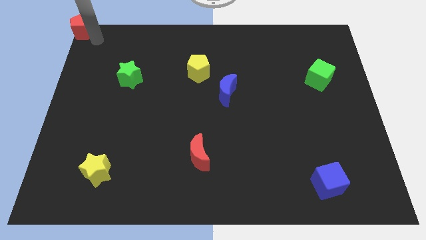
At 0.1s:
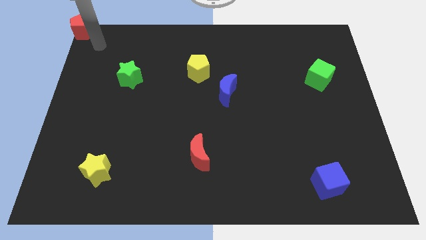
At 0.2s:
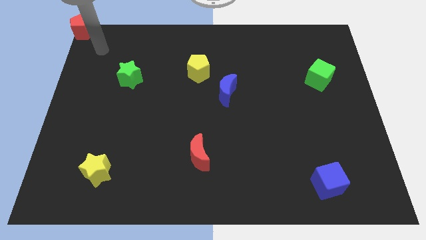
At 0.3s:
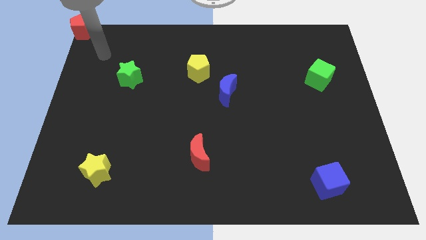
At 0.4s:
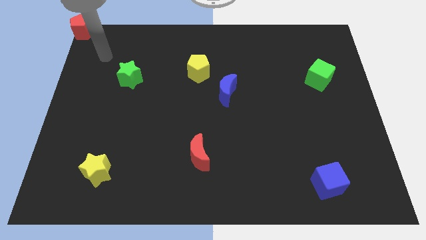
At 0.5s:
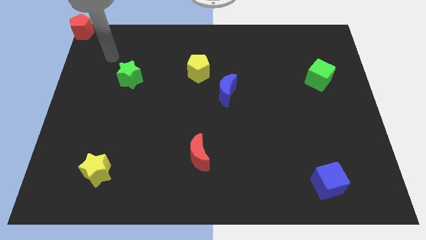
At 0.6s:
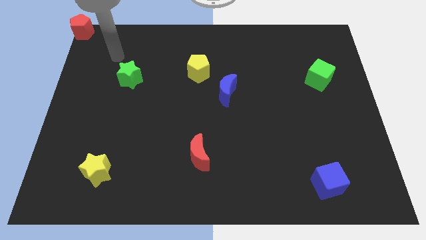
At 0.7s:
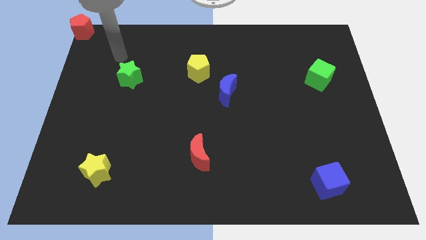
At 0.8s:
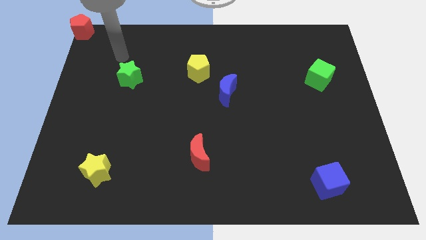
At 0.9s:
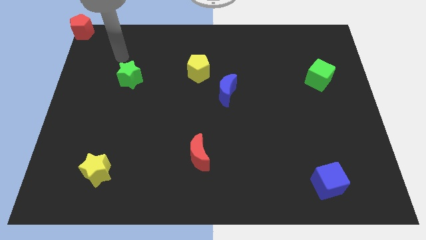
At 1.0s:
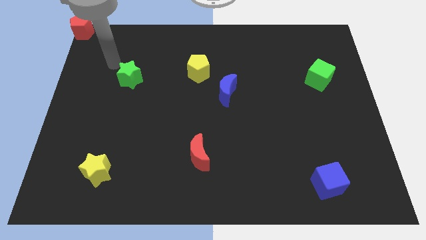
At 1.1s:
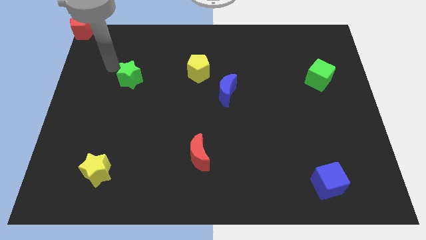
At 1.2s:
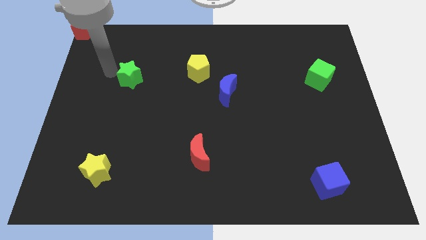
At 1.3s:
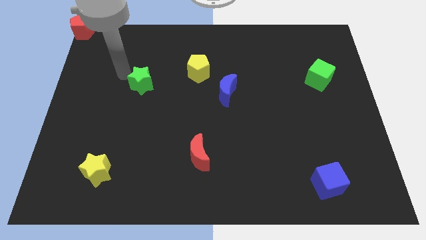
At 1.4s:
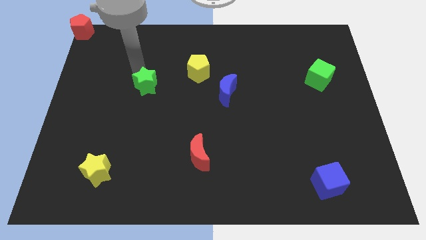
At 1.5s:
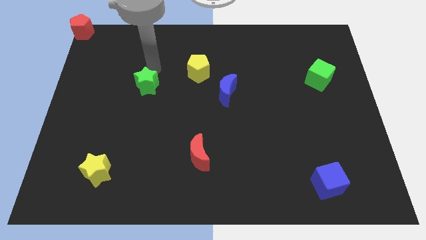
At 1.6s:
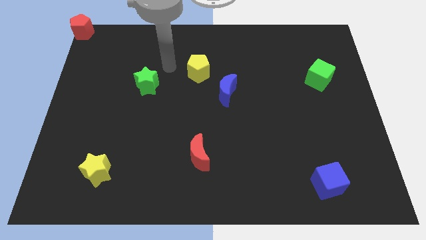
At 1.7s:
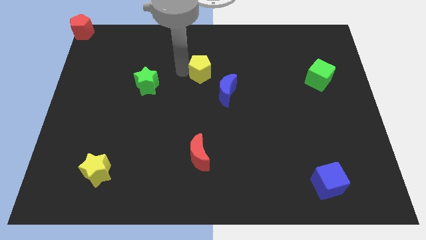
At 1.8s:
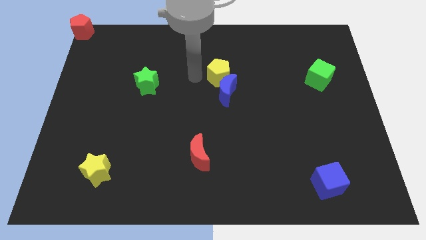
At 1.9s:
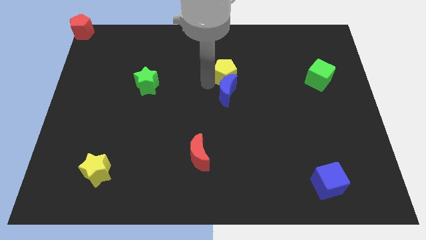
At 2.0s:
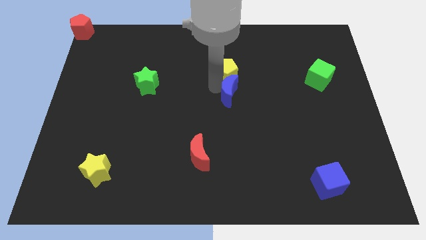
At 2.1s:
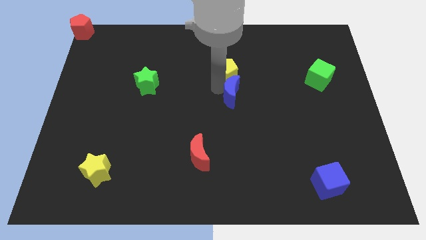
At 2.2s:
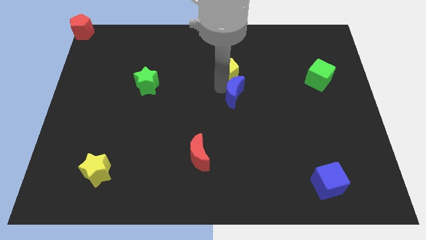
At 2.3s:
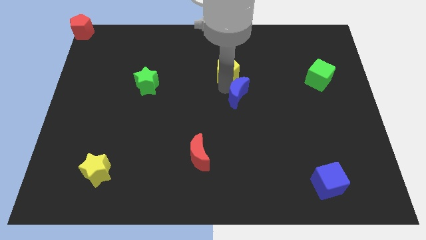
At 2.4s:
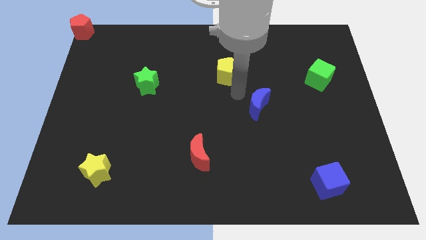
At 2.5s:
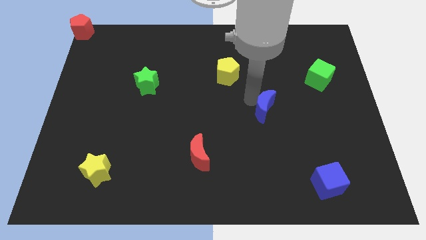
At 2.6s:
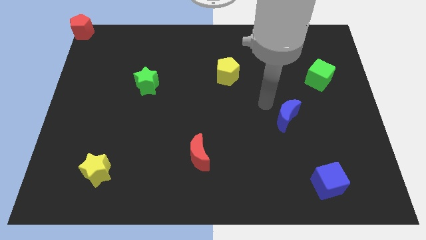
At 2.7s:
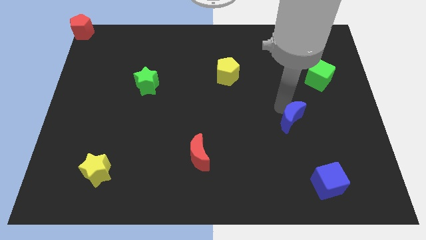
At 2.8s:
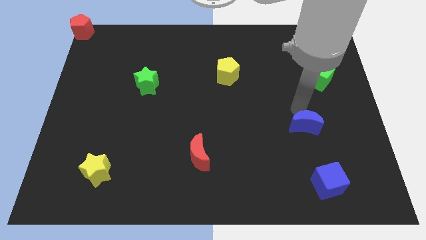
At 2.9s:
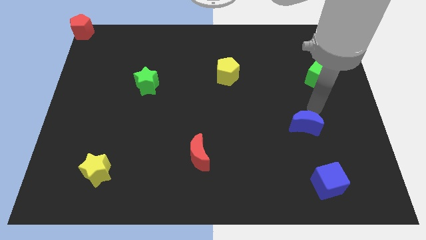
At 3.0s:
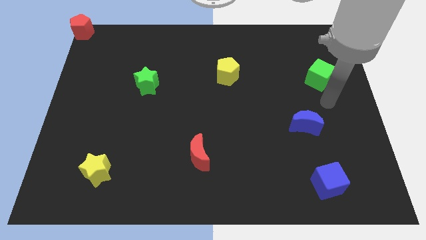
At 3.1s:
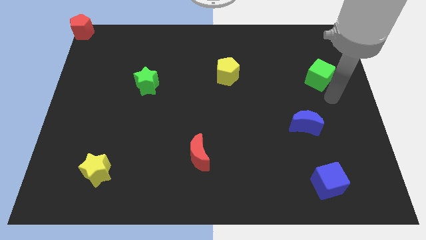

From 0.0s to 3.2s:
push the blue moon away from the yellow pentagon

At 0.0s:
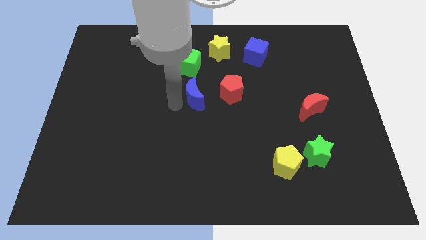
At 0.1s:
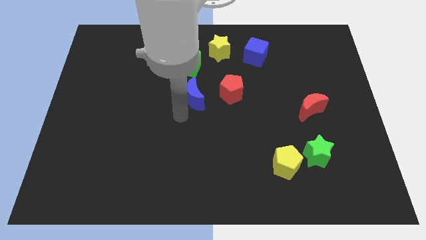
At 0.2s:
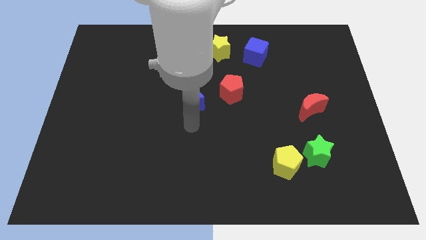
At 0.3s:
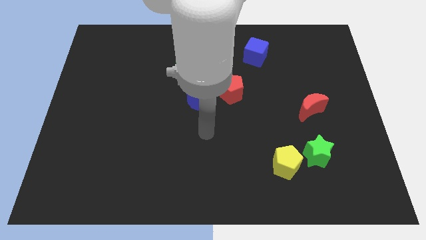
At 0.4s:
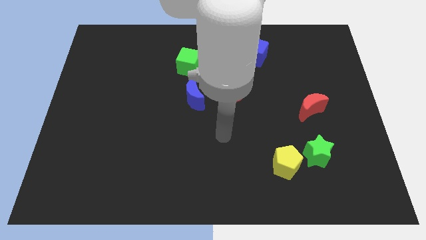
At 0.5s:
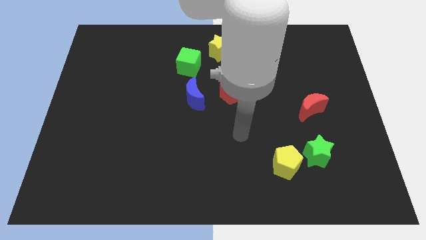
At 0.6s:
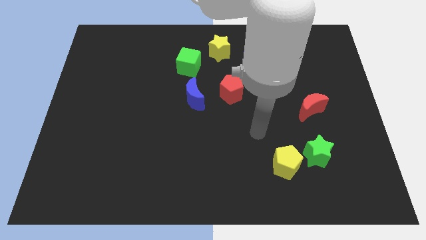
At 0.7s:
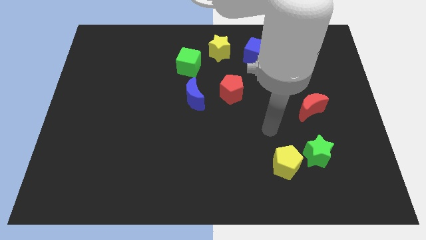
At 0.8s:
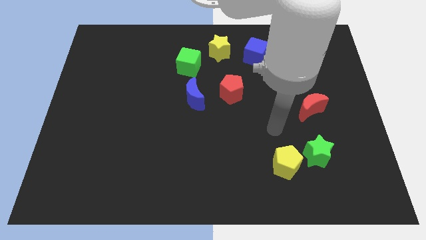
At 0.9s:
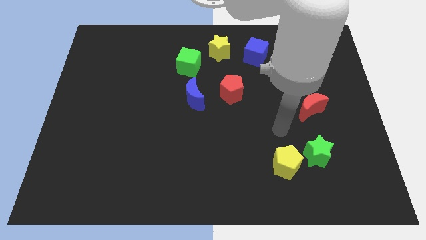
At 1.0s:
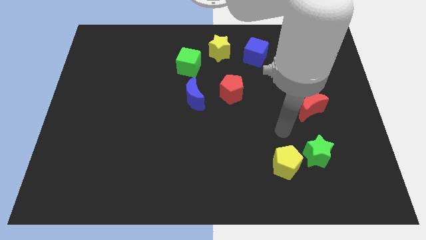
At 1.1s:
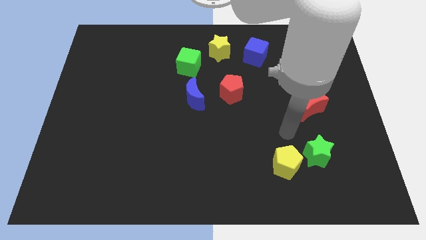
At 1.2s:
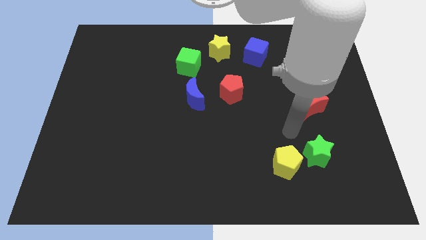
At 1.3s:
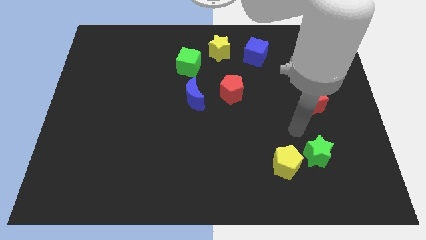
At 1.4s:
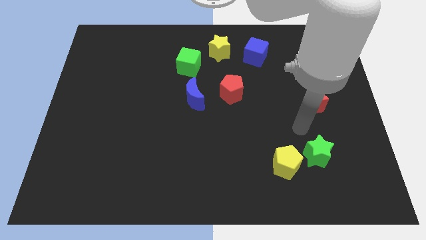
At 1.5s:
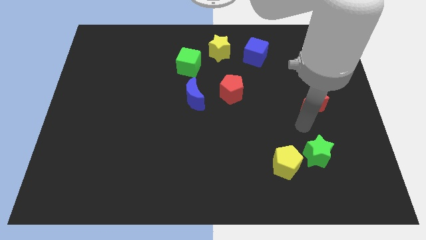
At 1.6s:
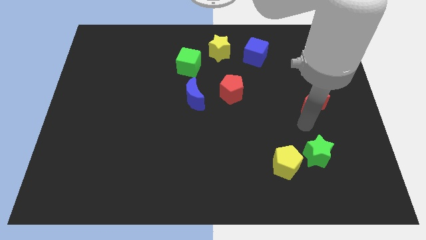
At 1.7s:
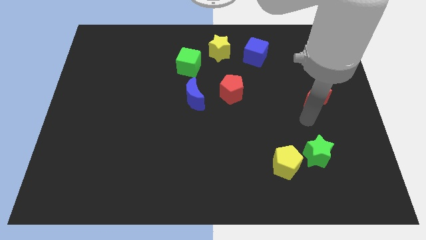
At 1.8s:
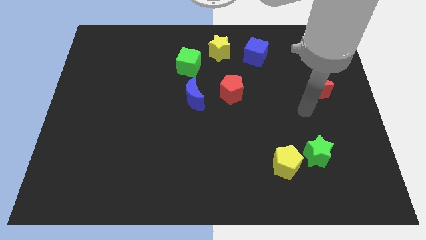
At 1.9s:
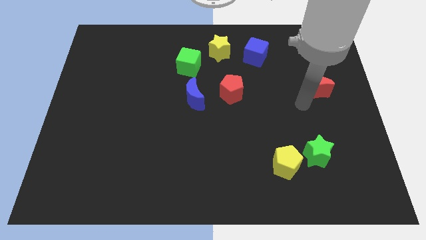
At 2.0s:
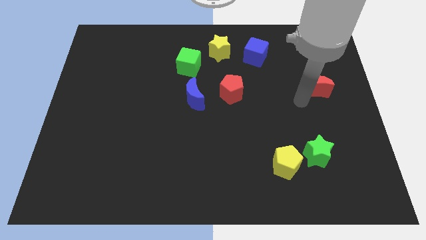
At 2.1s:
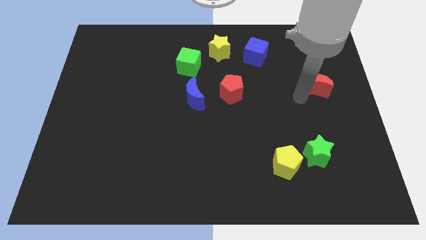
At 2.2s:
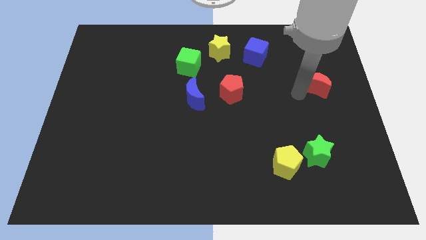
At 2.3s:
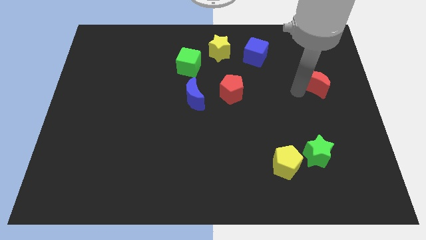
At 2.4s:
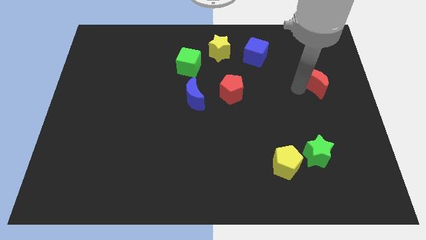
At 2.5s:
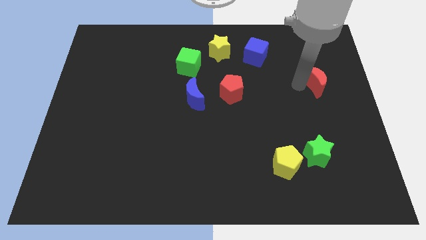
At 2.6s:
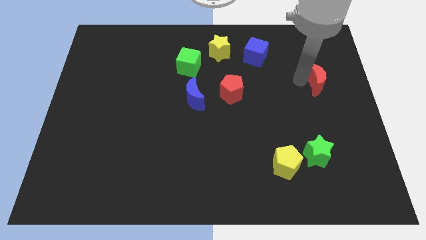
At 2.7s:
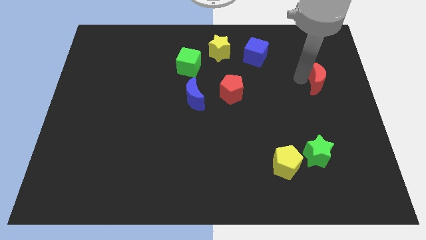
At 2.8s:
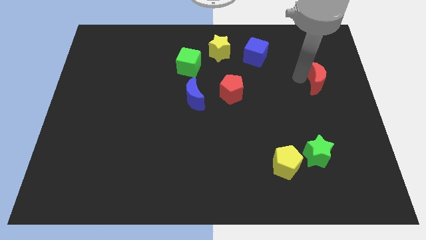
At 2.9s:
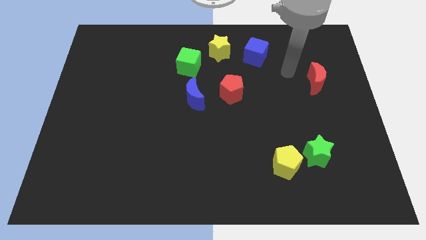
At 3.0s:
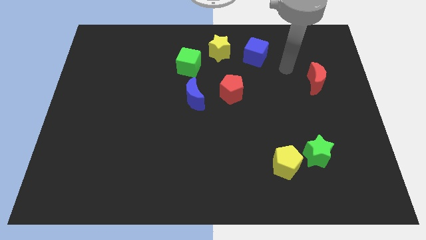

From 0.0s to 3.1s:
slide red moon to the right of red pentagon

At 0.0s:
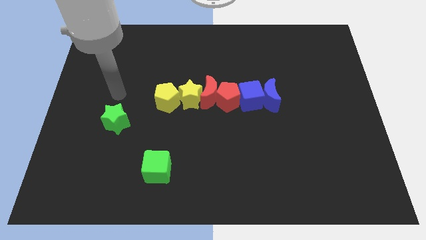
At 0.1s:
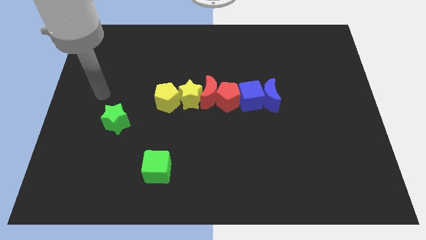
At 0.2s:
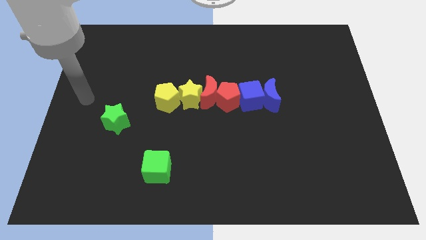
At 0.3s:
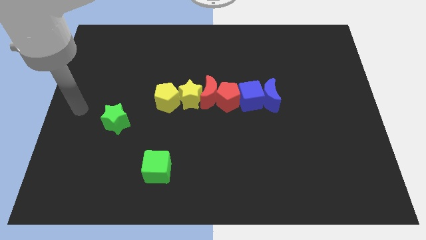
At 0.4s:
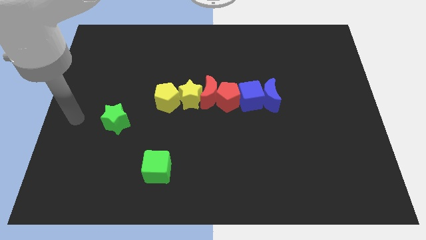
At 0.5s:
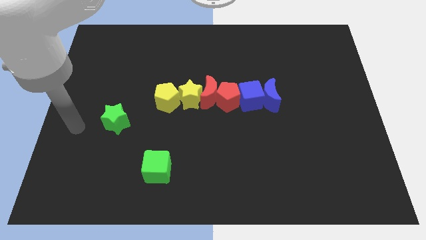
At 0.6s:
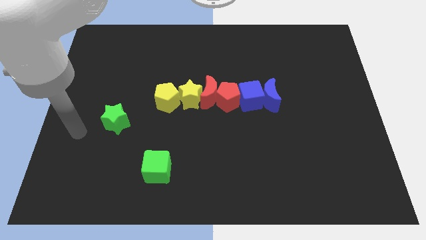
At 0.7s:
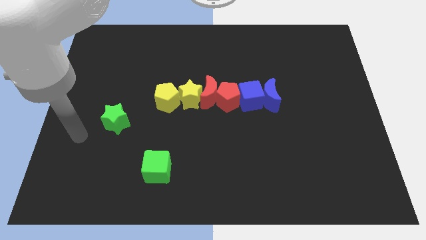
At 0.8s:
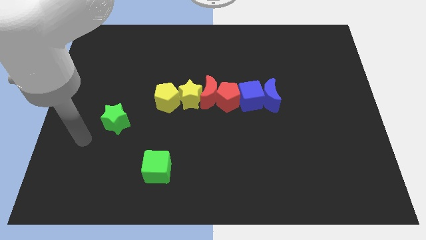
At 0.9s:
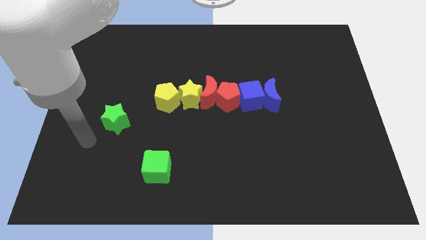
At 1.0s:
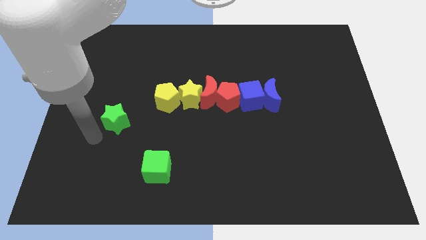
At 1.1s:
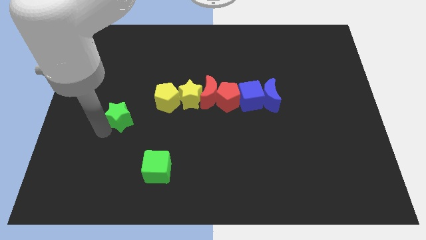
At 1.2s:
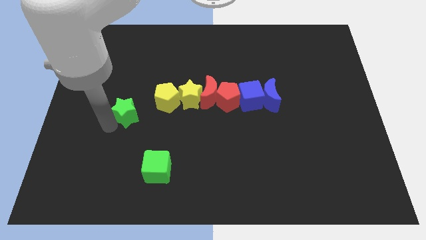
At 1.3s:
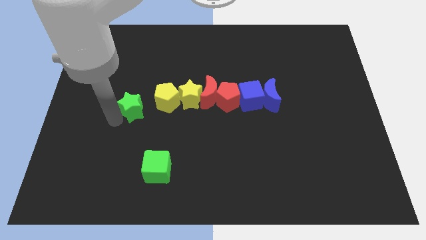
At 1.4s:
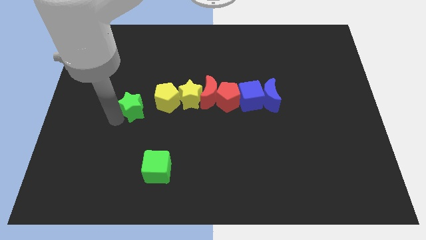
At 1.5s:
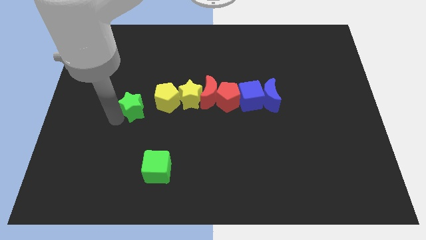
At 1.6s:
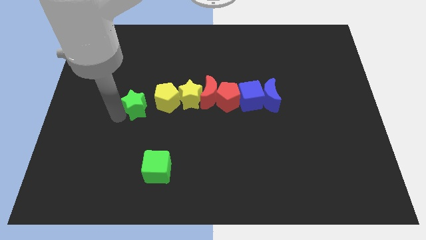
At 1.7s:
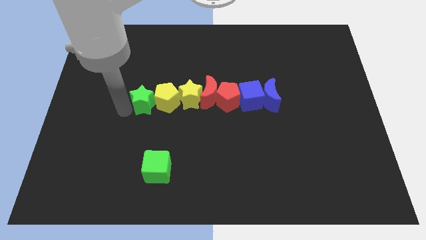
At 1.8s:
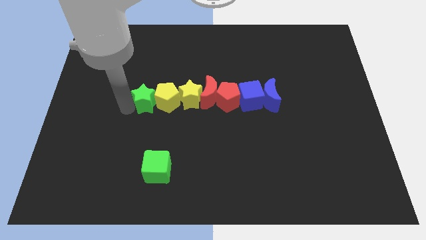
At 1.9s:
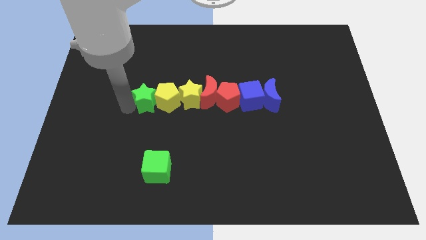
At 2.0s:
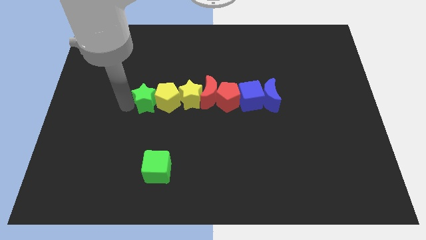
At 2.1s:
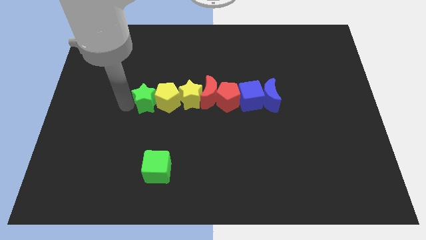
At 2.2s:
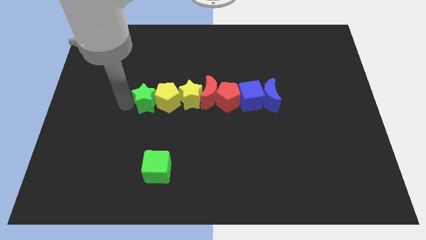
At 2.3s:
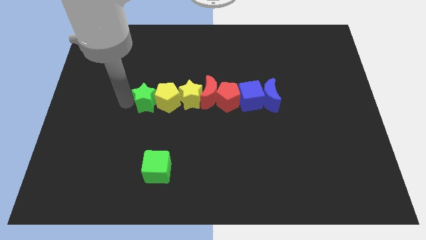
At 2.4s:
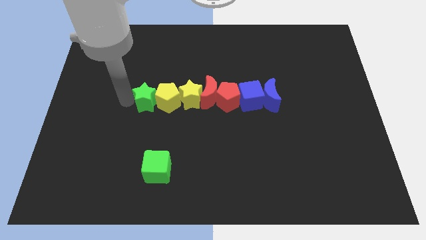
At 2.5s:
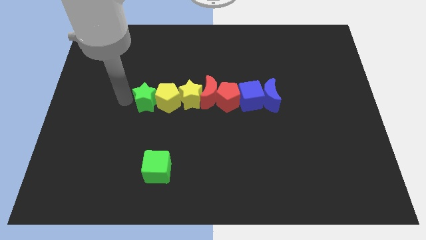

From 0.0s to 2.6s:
move the green star left to the yellow pentagon

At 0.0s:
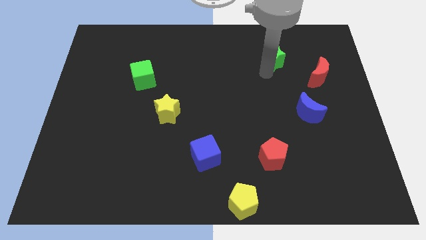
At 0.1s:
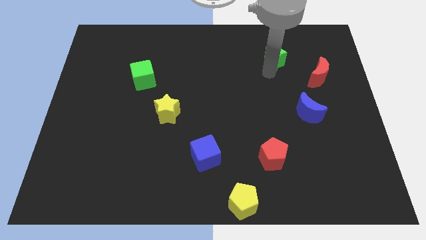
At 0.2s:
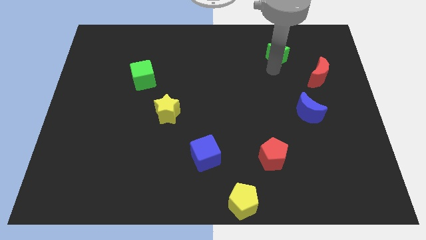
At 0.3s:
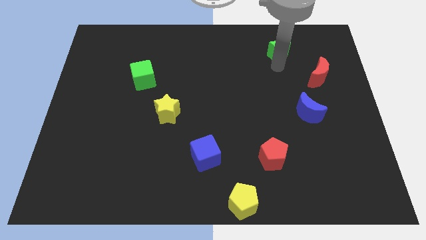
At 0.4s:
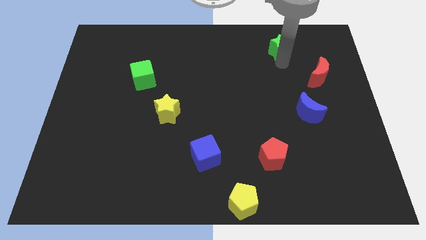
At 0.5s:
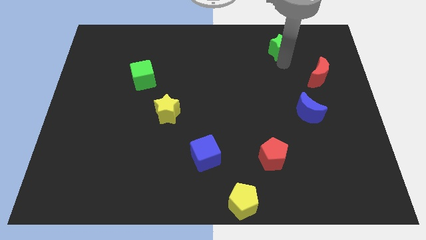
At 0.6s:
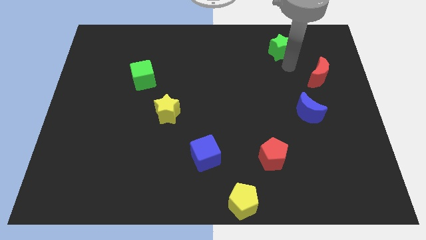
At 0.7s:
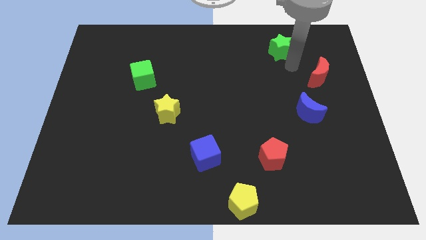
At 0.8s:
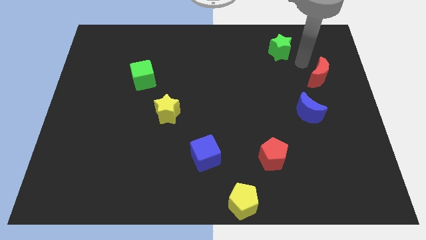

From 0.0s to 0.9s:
push the green star towards the top right side of the board
